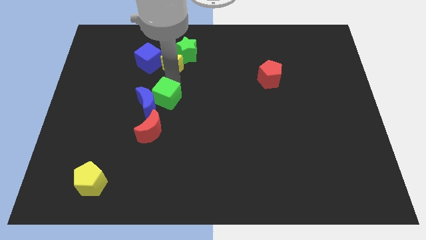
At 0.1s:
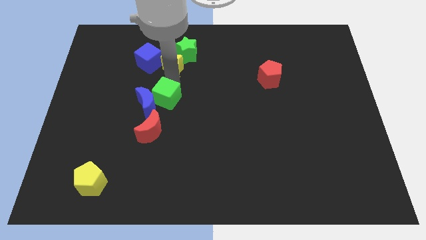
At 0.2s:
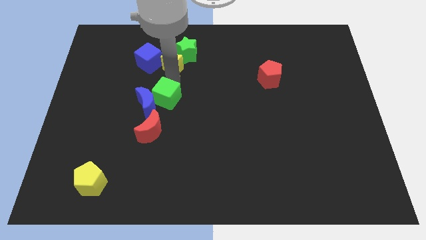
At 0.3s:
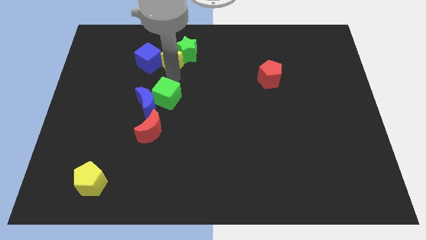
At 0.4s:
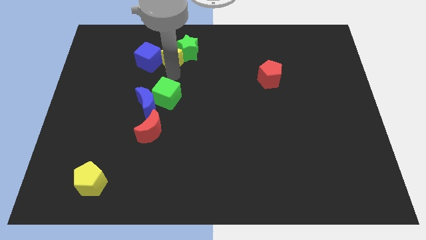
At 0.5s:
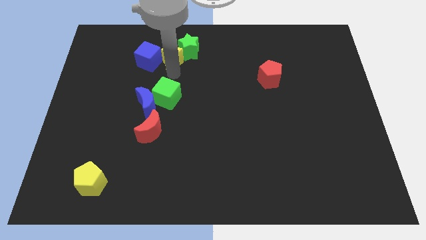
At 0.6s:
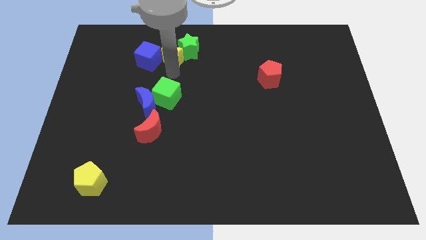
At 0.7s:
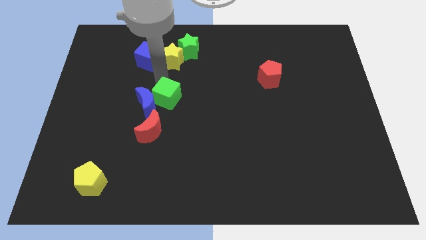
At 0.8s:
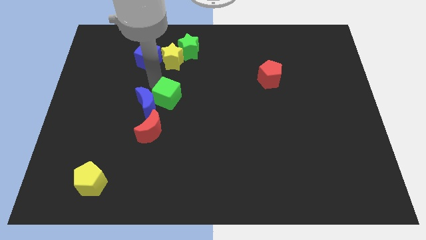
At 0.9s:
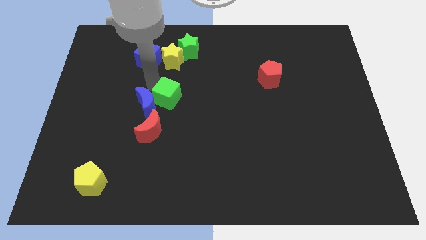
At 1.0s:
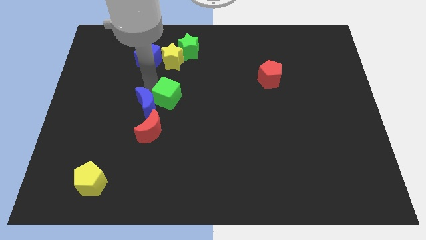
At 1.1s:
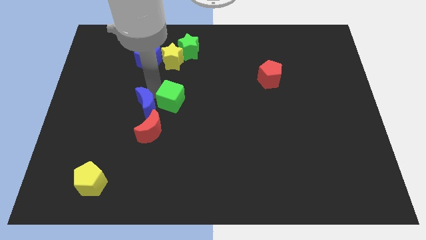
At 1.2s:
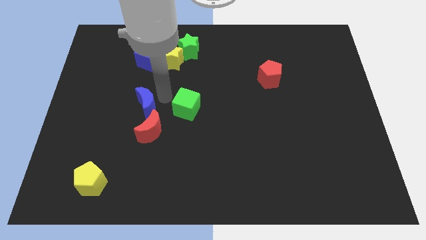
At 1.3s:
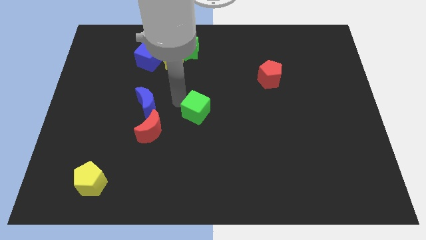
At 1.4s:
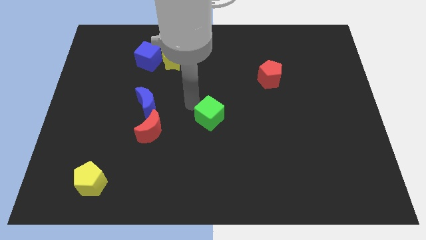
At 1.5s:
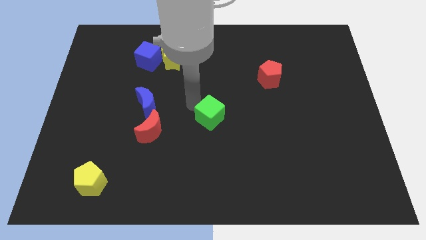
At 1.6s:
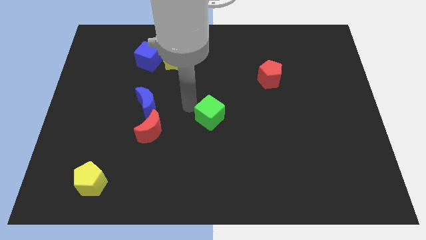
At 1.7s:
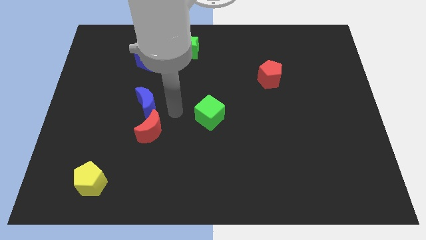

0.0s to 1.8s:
push th yellow star upwards and green cube to the center

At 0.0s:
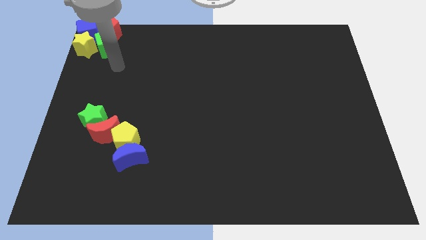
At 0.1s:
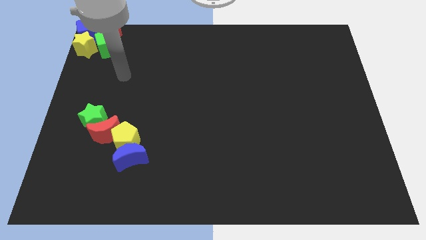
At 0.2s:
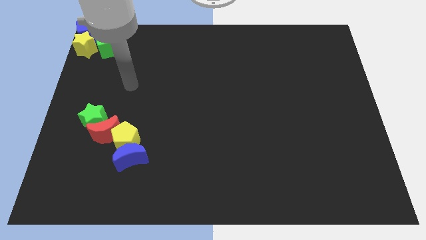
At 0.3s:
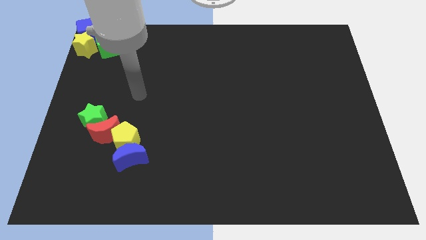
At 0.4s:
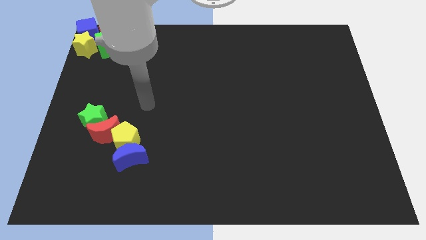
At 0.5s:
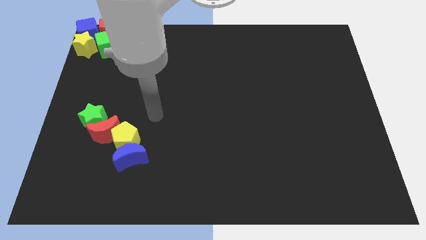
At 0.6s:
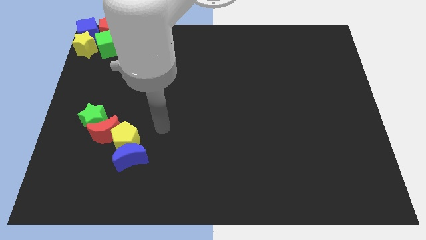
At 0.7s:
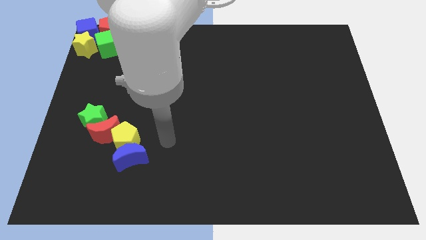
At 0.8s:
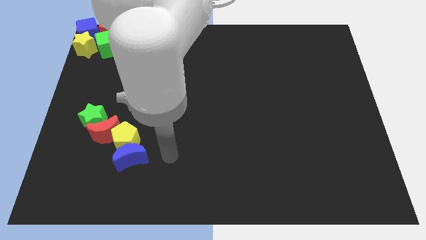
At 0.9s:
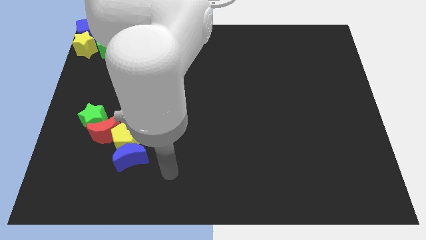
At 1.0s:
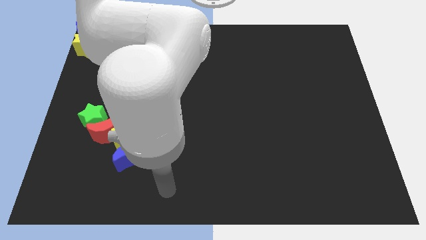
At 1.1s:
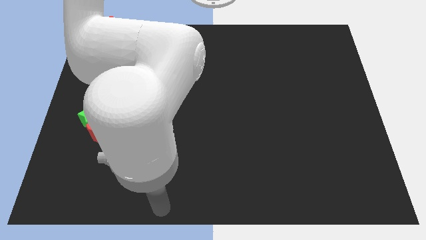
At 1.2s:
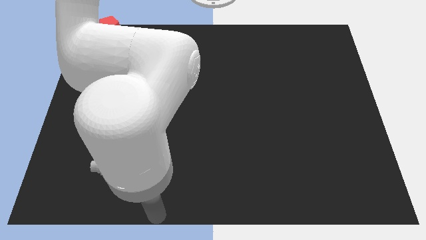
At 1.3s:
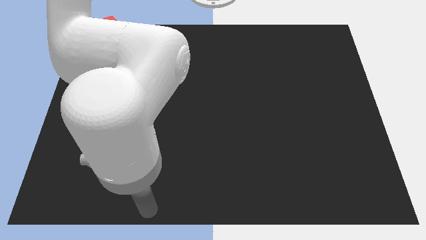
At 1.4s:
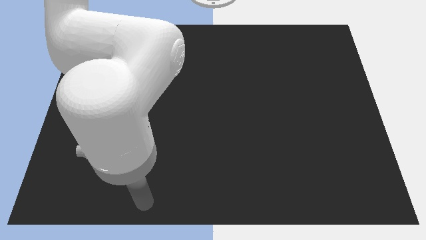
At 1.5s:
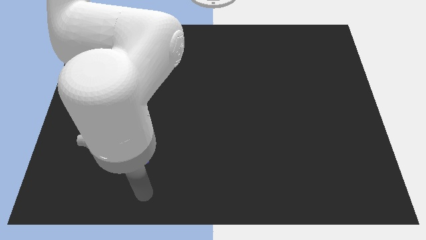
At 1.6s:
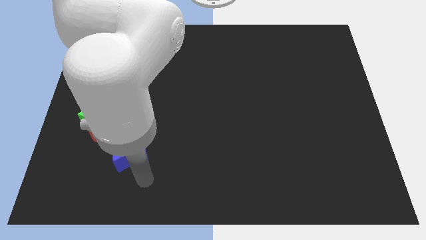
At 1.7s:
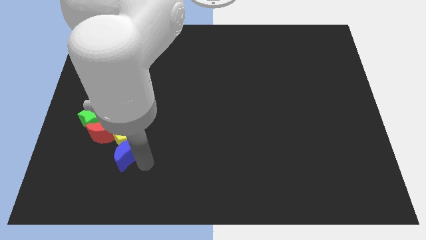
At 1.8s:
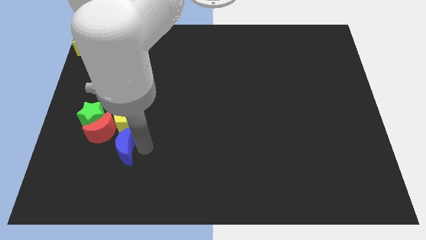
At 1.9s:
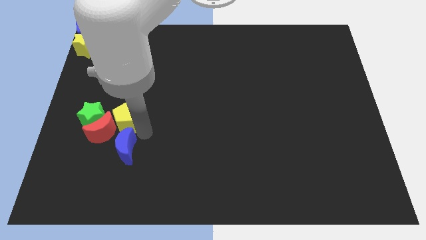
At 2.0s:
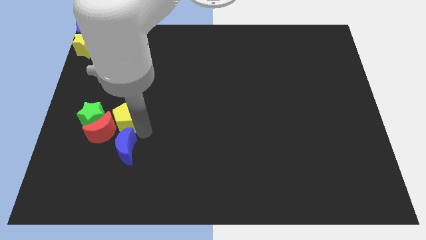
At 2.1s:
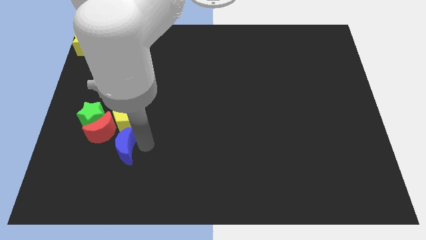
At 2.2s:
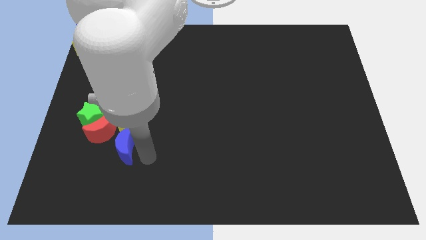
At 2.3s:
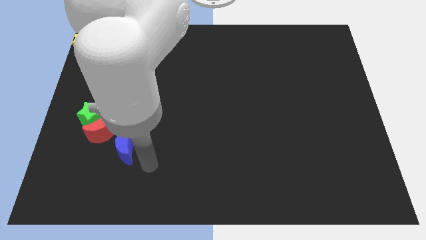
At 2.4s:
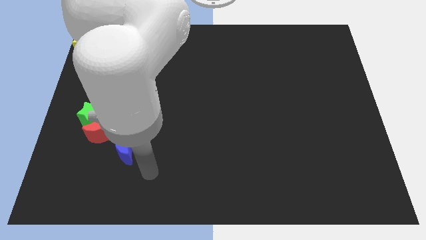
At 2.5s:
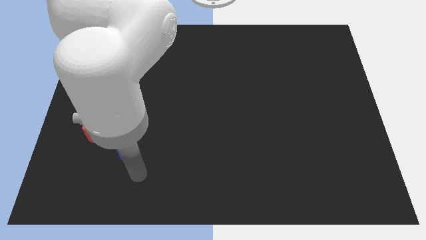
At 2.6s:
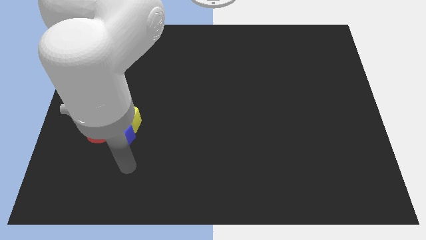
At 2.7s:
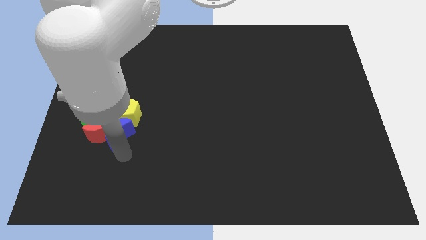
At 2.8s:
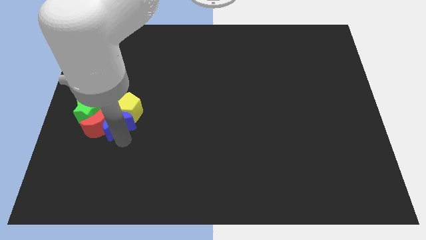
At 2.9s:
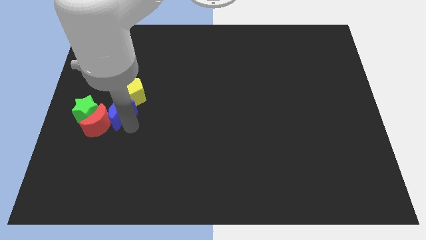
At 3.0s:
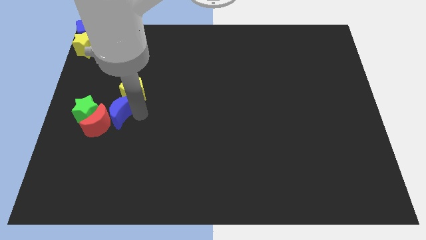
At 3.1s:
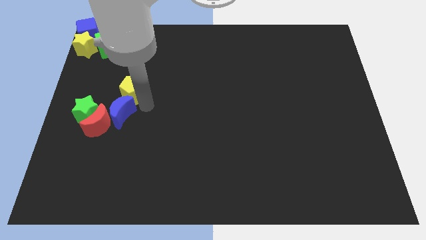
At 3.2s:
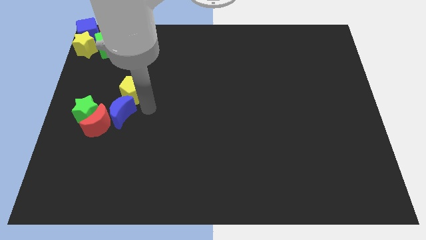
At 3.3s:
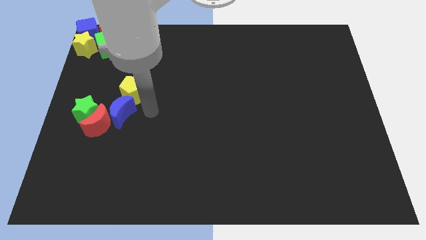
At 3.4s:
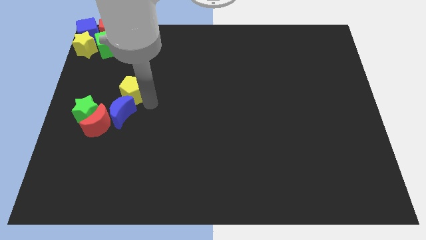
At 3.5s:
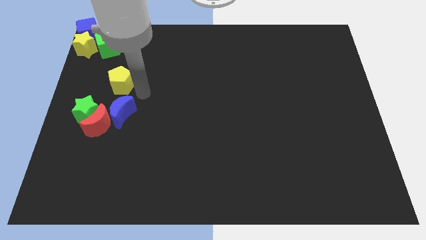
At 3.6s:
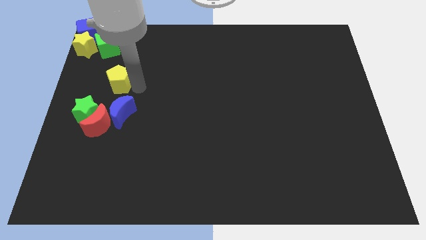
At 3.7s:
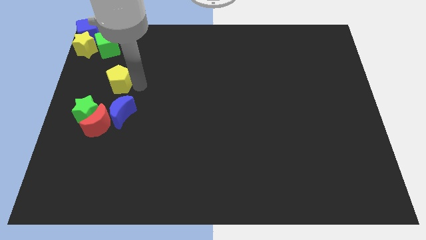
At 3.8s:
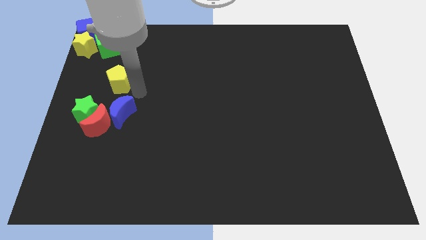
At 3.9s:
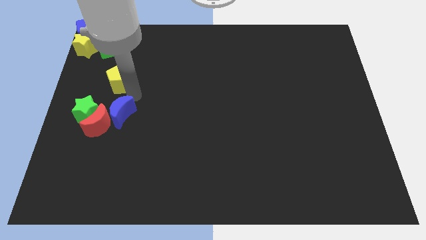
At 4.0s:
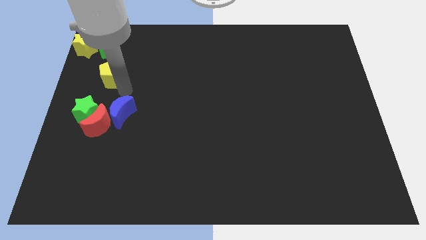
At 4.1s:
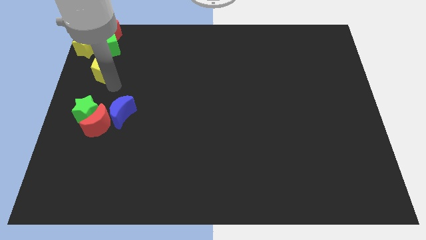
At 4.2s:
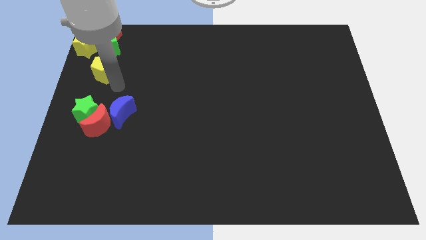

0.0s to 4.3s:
separate the yellow pentagon from the group of blocks

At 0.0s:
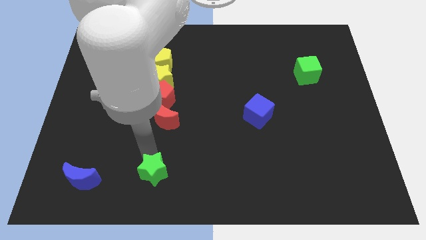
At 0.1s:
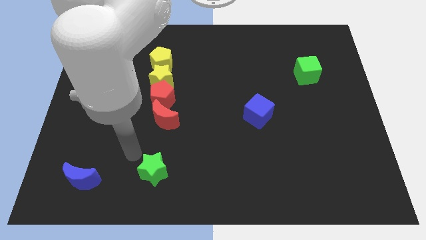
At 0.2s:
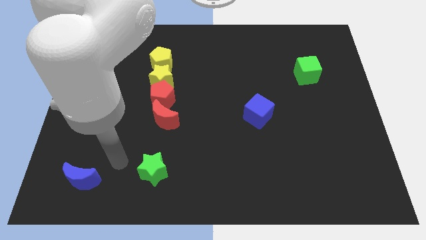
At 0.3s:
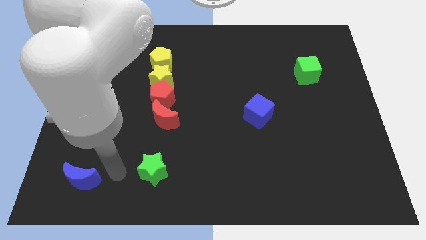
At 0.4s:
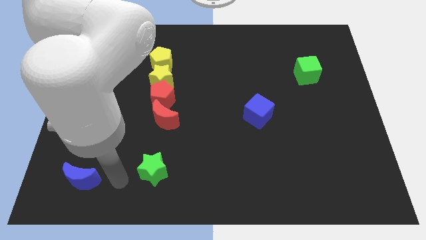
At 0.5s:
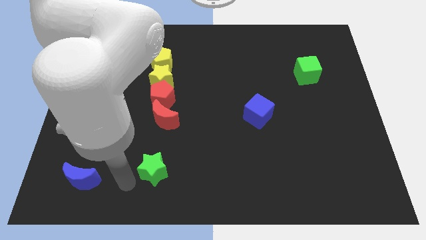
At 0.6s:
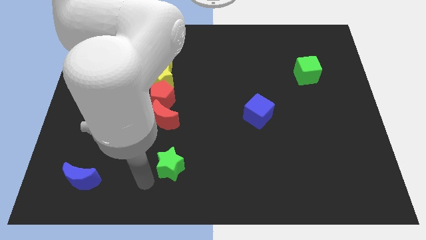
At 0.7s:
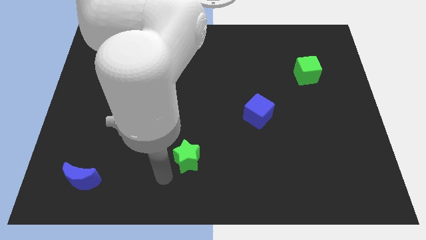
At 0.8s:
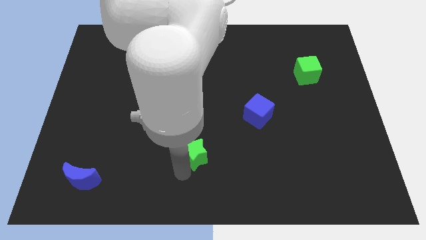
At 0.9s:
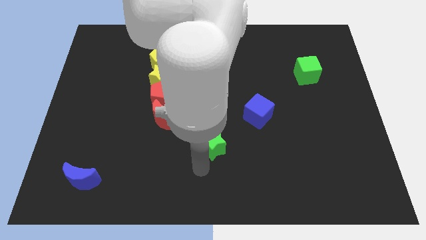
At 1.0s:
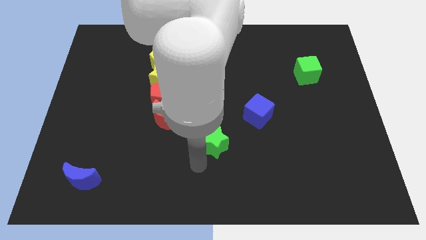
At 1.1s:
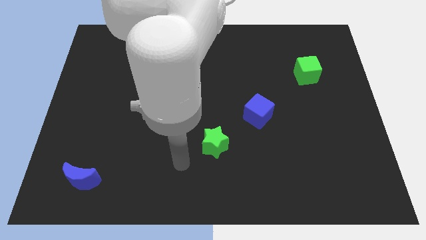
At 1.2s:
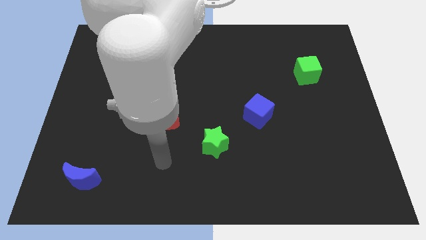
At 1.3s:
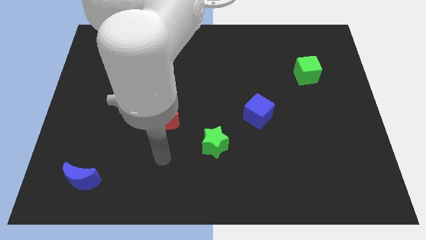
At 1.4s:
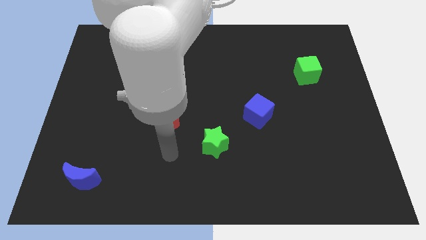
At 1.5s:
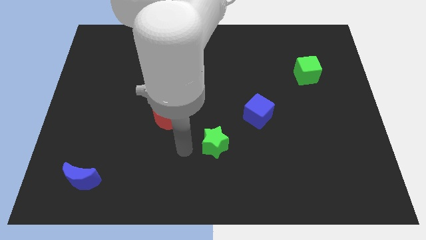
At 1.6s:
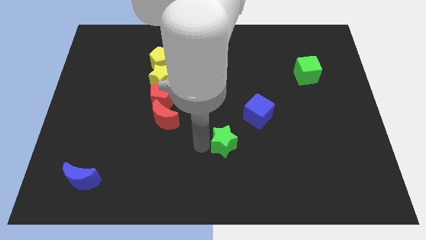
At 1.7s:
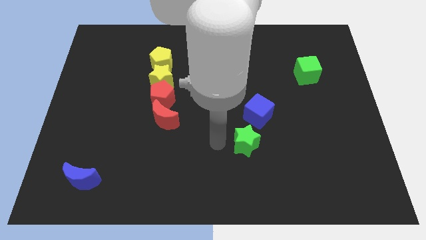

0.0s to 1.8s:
slide the green star towards the blue cube

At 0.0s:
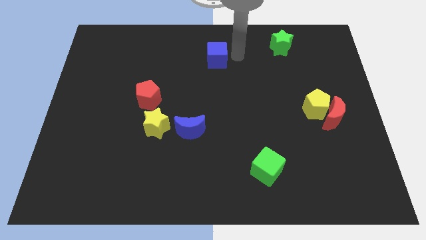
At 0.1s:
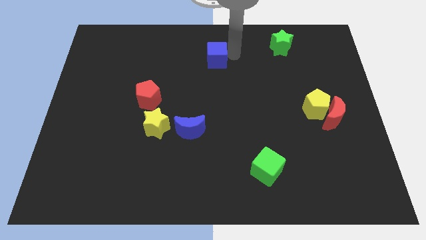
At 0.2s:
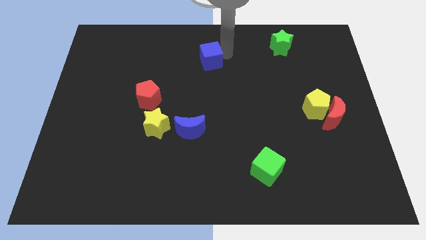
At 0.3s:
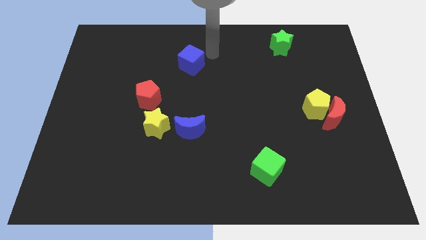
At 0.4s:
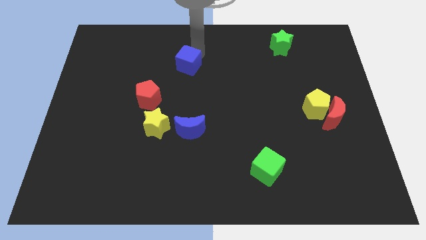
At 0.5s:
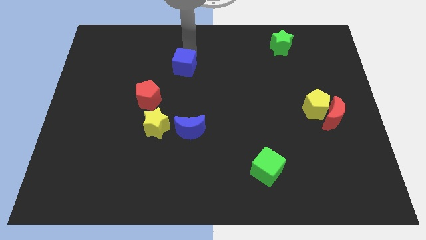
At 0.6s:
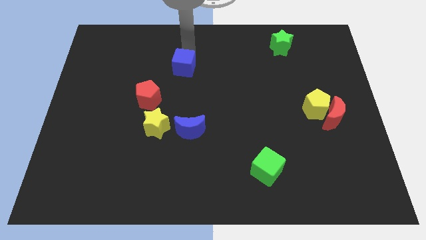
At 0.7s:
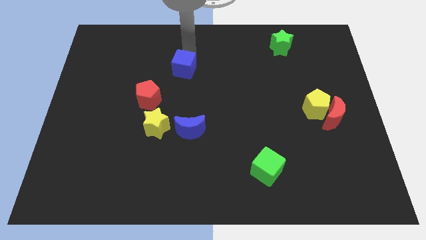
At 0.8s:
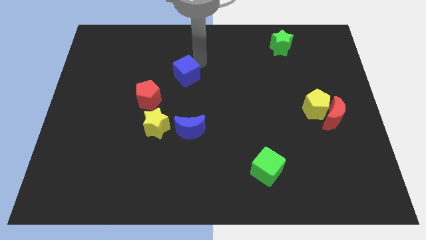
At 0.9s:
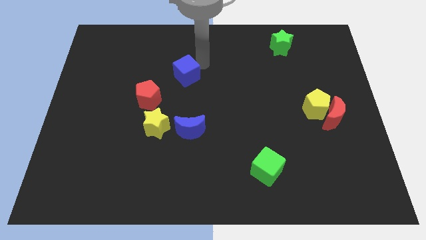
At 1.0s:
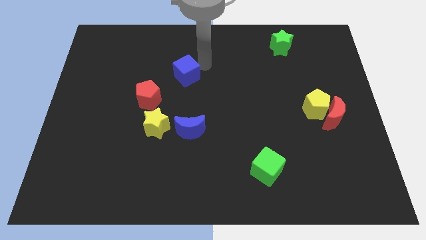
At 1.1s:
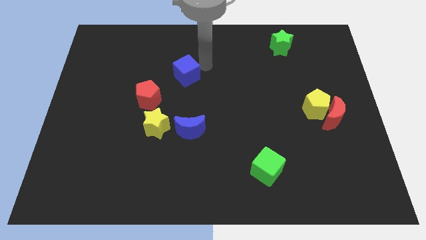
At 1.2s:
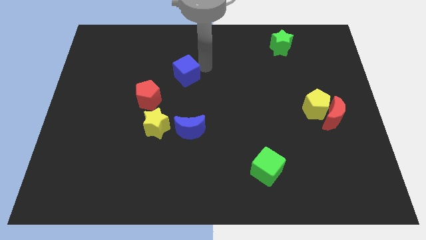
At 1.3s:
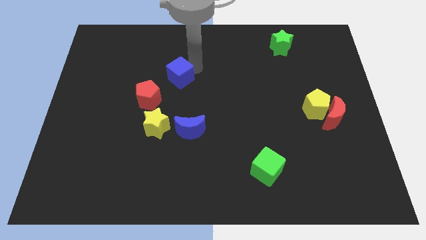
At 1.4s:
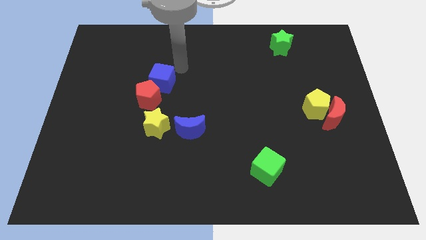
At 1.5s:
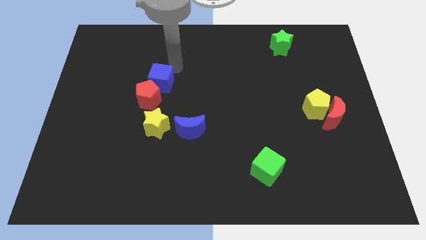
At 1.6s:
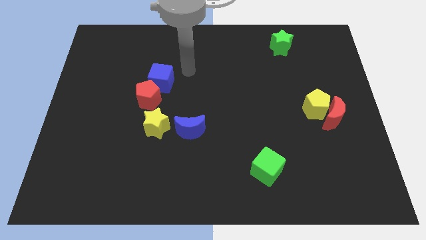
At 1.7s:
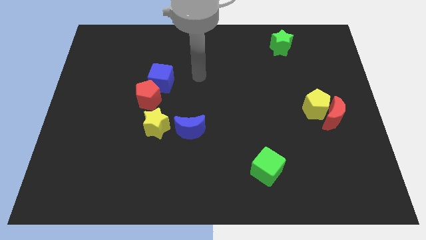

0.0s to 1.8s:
move the blue cube into the red pentagon
